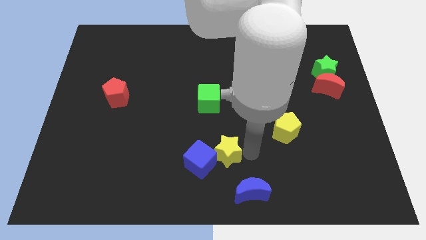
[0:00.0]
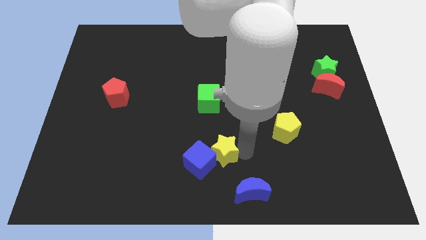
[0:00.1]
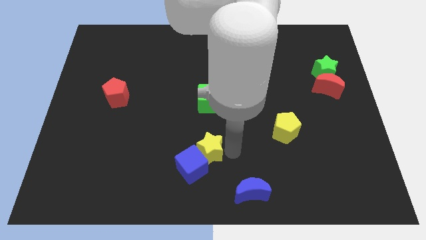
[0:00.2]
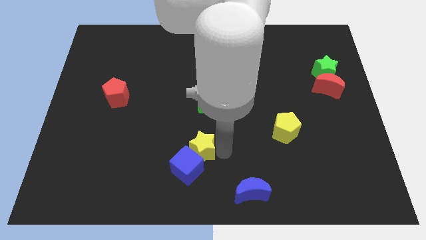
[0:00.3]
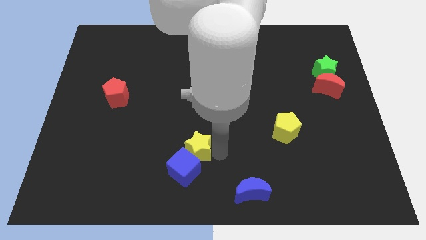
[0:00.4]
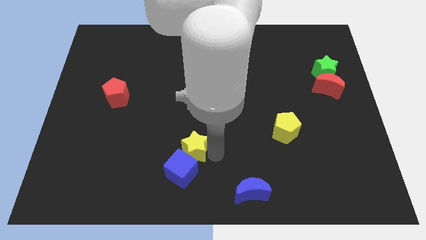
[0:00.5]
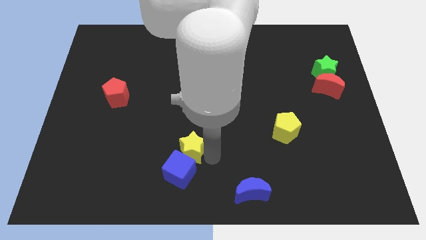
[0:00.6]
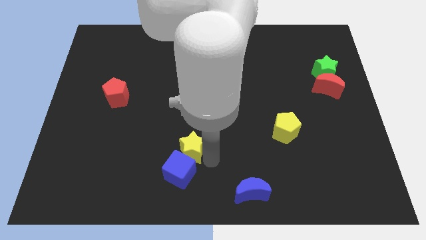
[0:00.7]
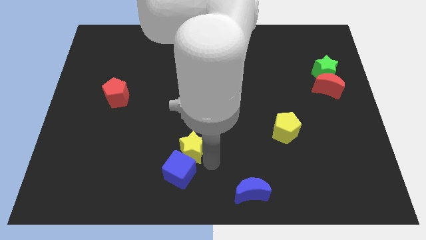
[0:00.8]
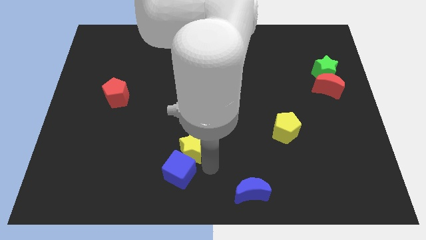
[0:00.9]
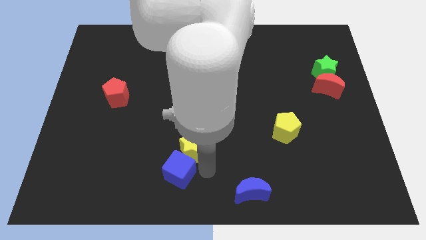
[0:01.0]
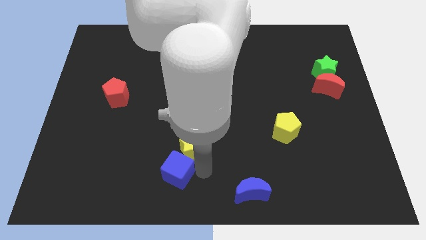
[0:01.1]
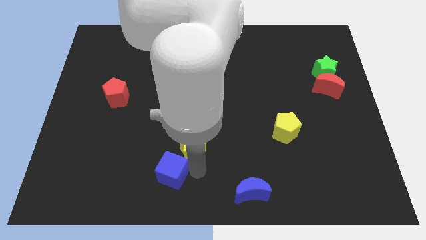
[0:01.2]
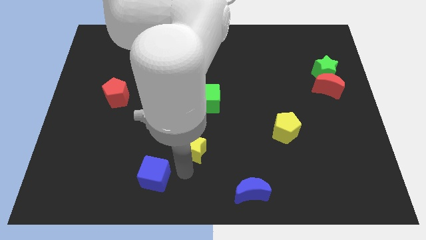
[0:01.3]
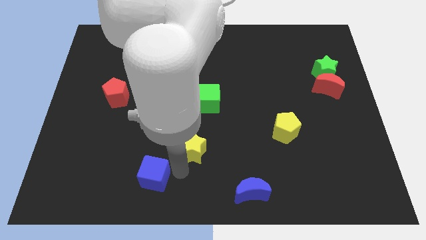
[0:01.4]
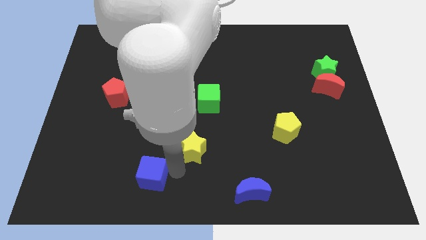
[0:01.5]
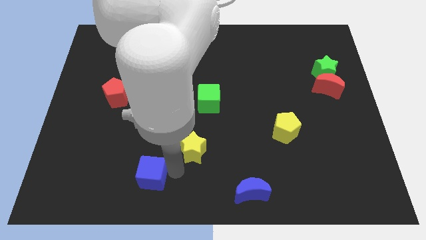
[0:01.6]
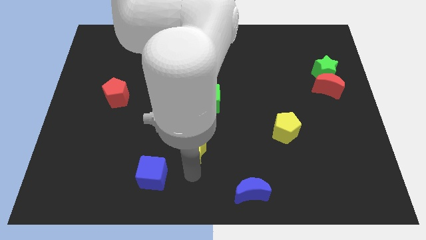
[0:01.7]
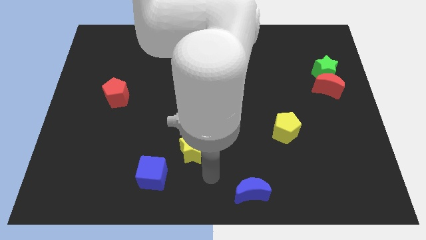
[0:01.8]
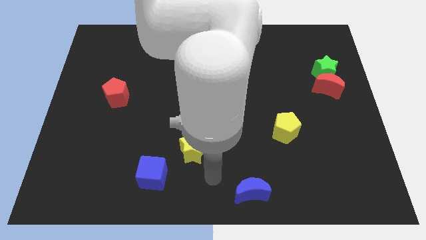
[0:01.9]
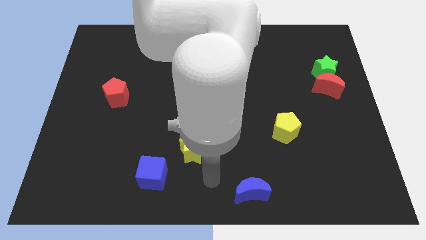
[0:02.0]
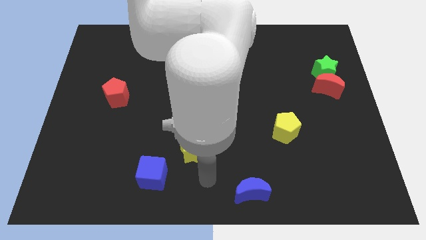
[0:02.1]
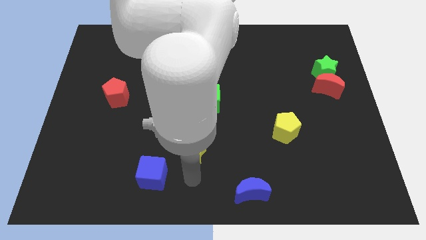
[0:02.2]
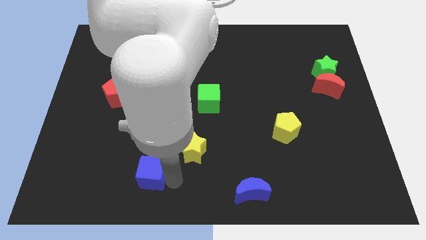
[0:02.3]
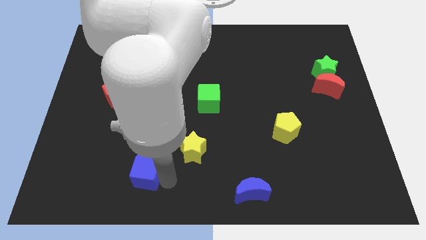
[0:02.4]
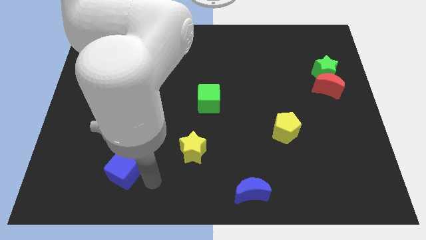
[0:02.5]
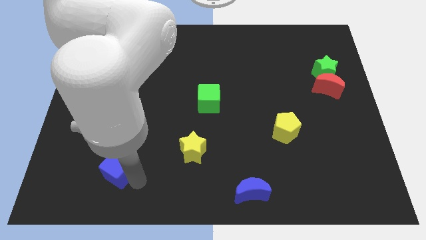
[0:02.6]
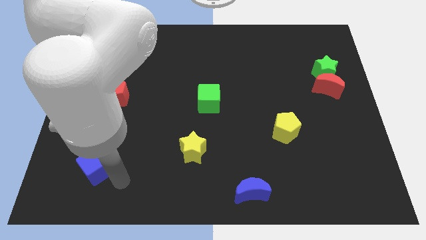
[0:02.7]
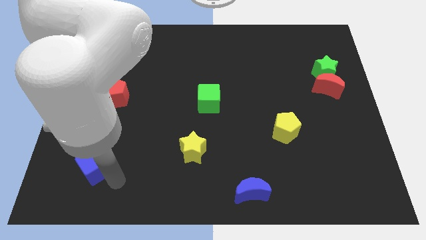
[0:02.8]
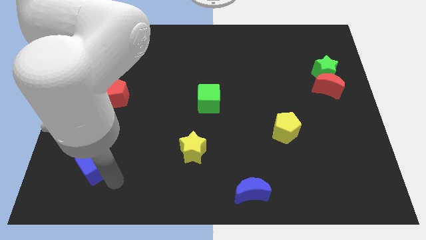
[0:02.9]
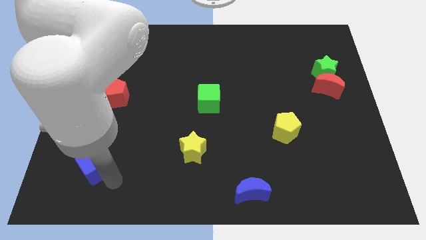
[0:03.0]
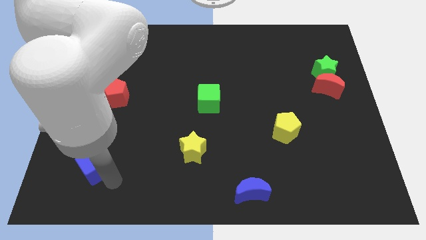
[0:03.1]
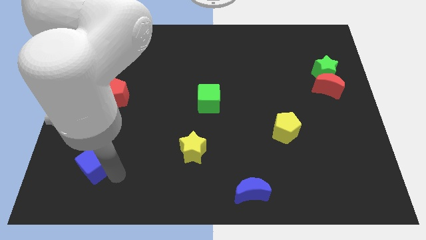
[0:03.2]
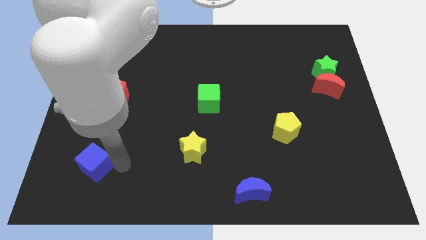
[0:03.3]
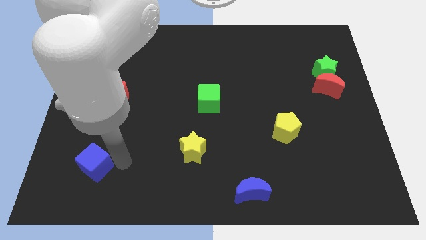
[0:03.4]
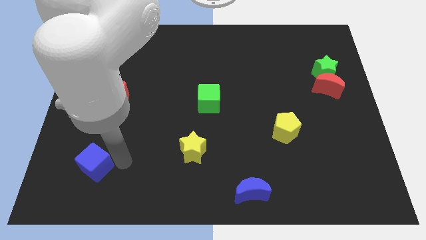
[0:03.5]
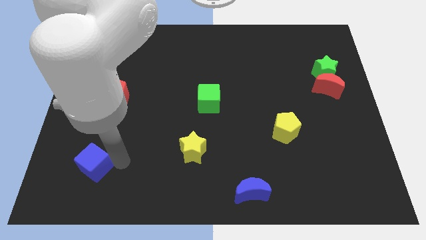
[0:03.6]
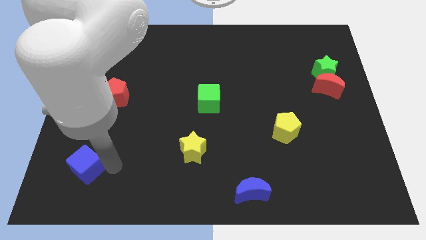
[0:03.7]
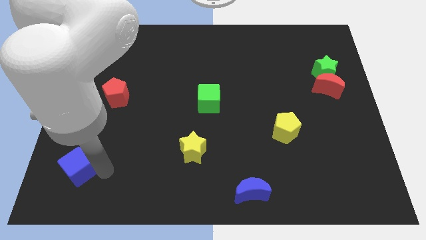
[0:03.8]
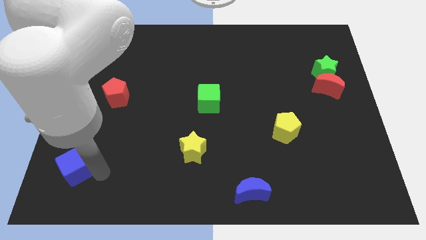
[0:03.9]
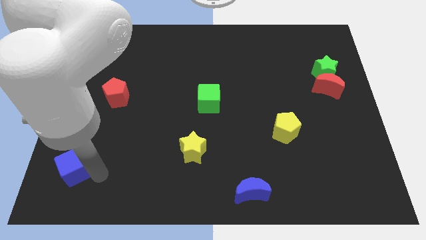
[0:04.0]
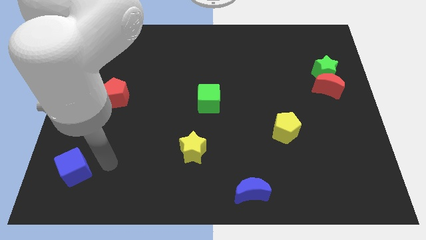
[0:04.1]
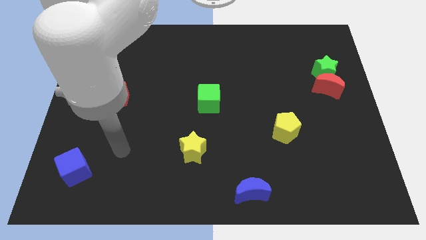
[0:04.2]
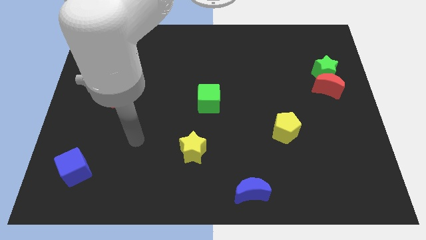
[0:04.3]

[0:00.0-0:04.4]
move the blue cube to the left

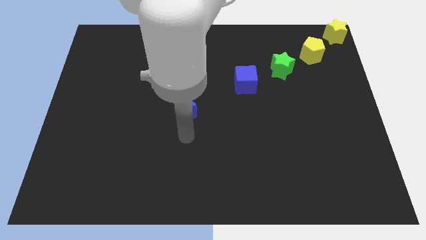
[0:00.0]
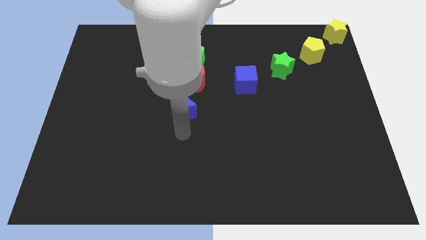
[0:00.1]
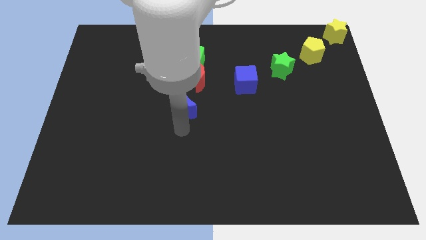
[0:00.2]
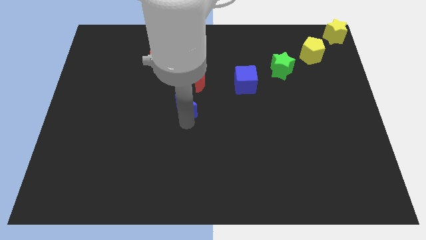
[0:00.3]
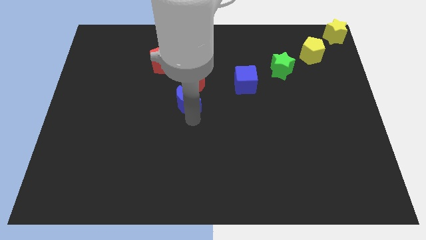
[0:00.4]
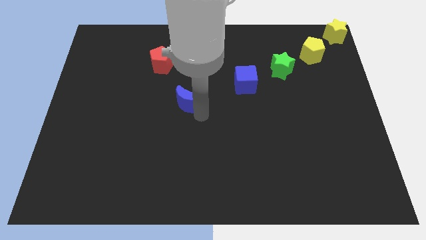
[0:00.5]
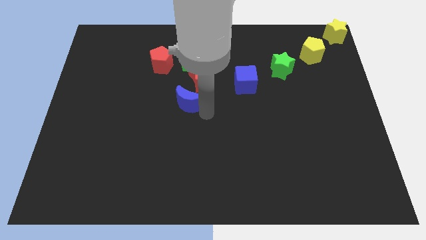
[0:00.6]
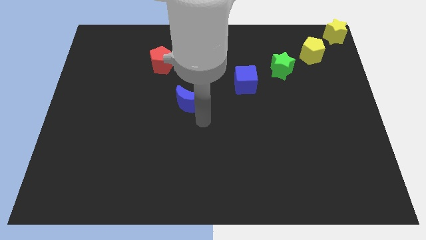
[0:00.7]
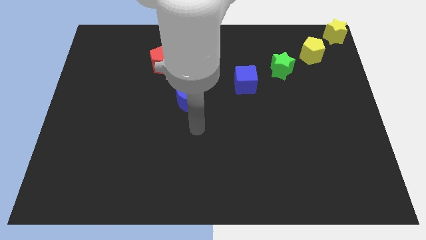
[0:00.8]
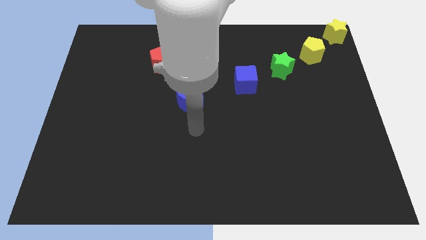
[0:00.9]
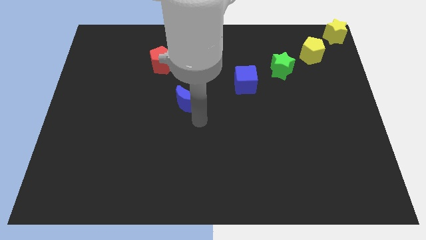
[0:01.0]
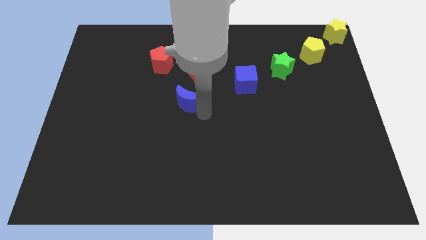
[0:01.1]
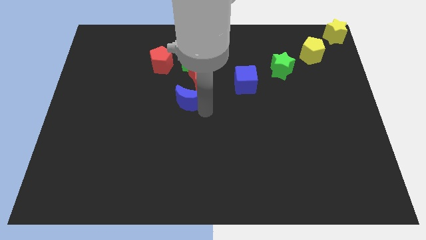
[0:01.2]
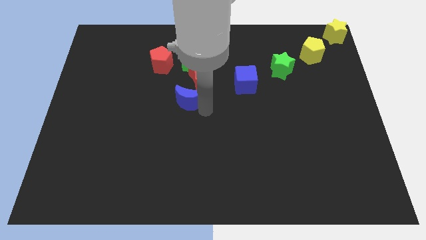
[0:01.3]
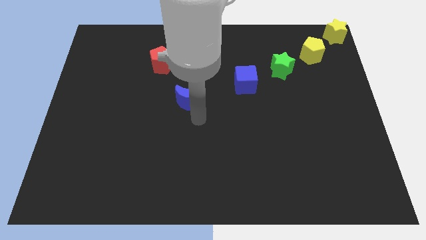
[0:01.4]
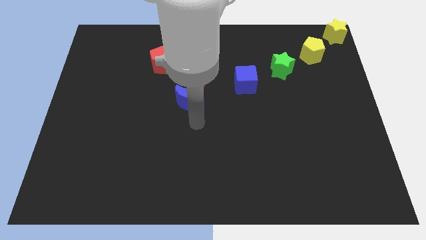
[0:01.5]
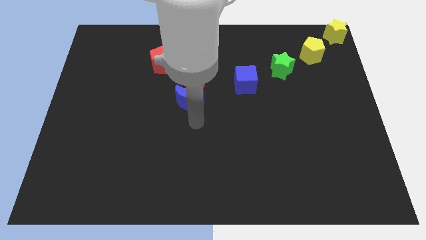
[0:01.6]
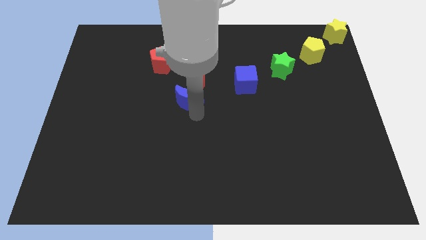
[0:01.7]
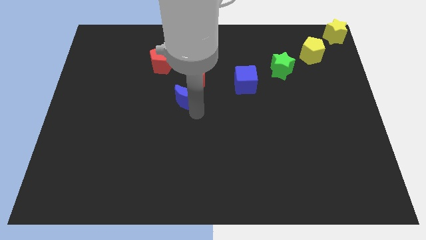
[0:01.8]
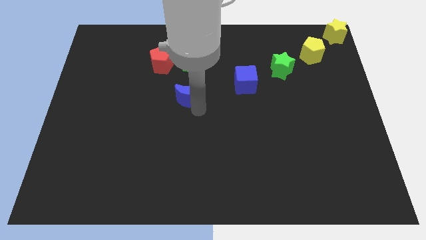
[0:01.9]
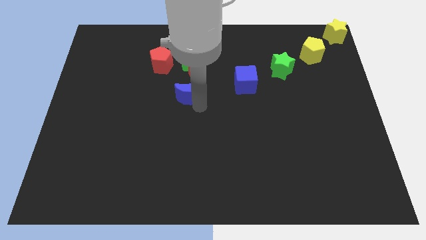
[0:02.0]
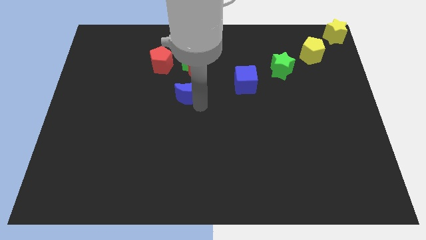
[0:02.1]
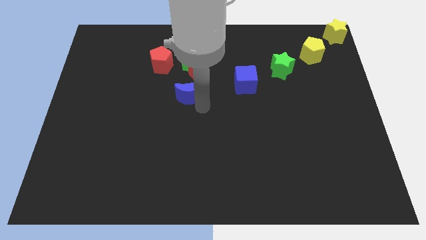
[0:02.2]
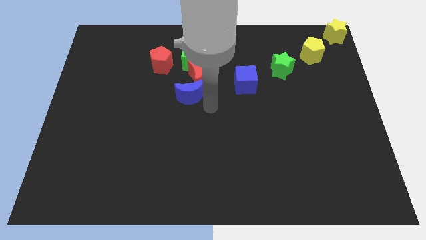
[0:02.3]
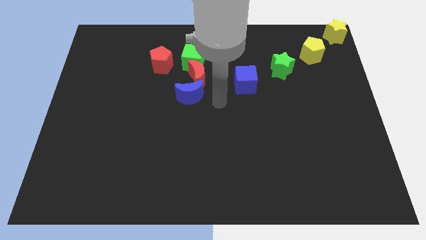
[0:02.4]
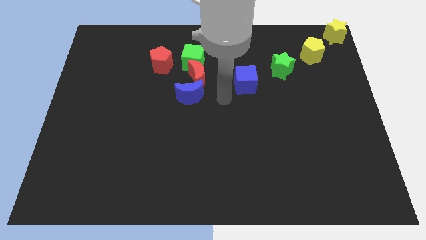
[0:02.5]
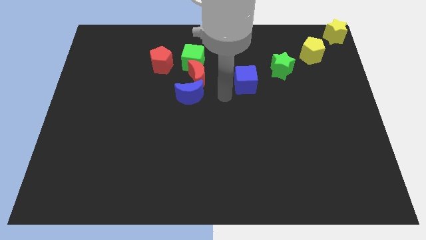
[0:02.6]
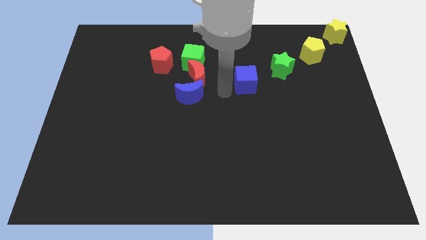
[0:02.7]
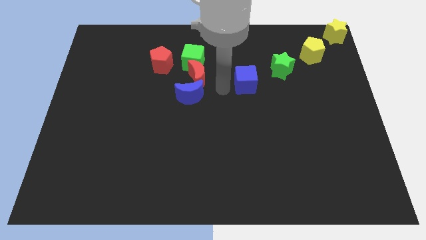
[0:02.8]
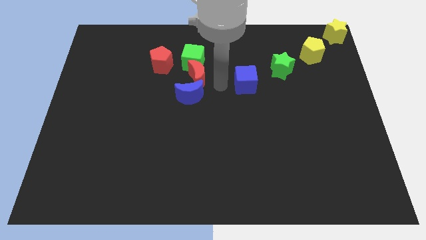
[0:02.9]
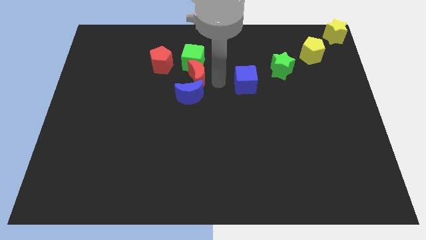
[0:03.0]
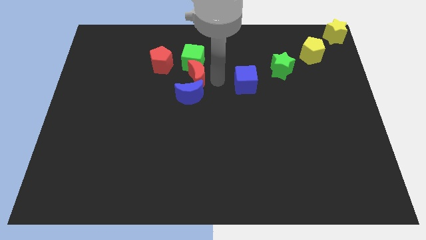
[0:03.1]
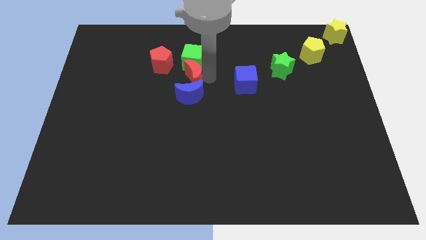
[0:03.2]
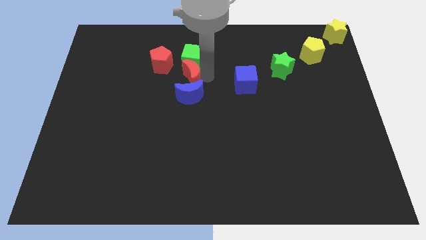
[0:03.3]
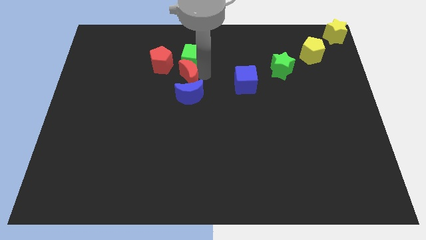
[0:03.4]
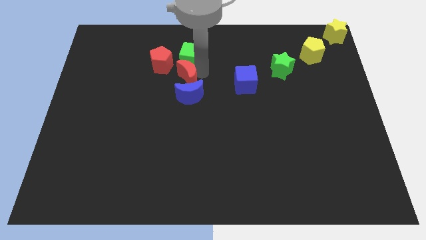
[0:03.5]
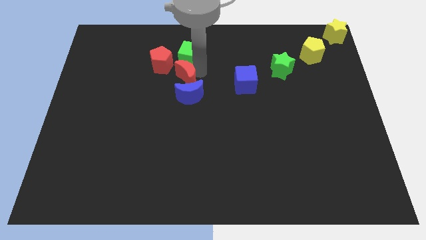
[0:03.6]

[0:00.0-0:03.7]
push the blue moon into a group of blocks

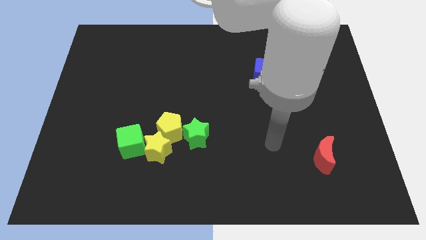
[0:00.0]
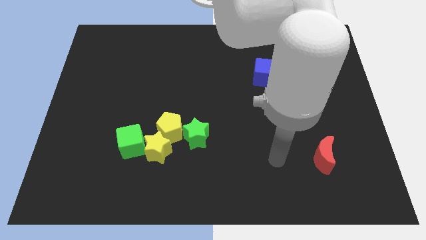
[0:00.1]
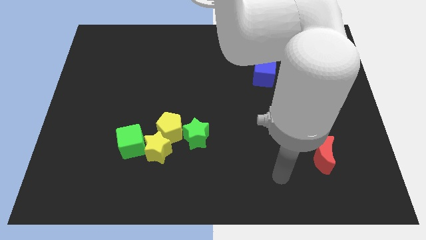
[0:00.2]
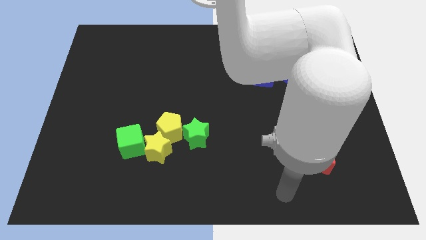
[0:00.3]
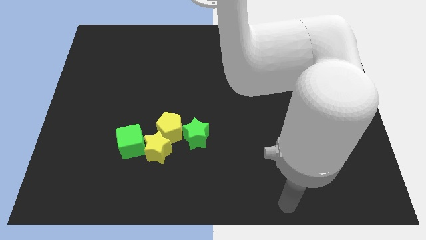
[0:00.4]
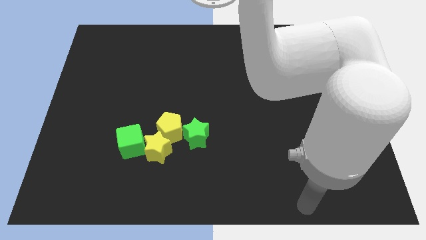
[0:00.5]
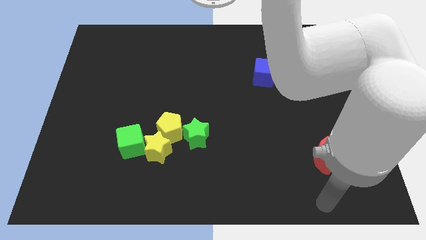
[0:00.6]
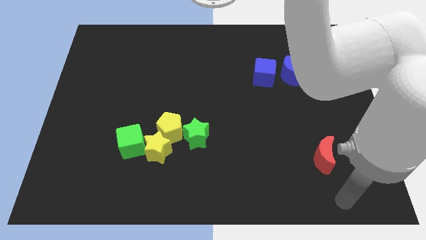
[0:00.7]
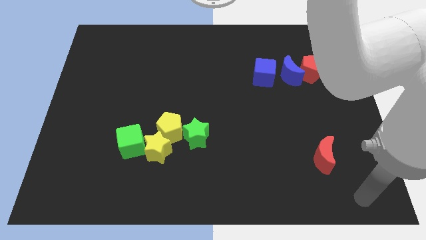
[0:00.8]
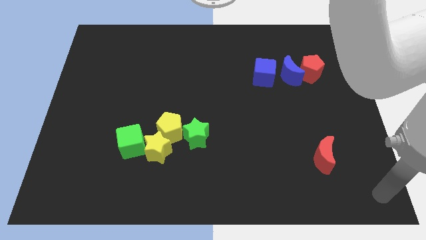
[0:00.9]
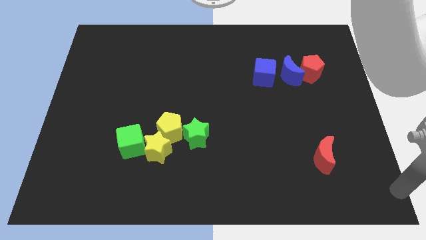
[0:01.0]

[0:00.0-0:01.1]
move your arm to the bottom right to the board
